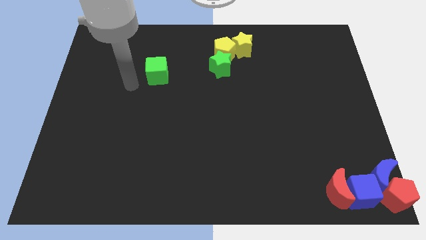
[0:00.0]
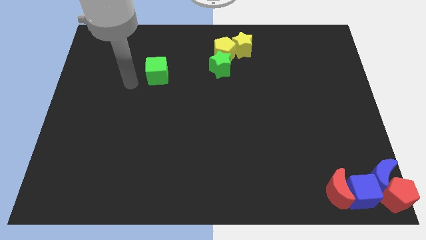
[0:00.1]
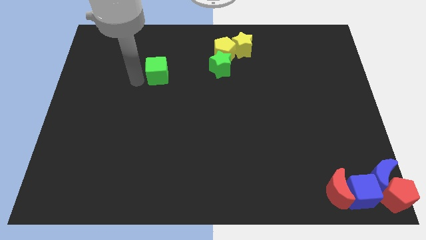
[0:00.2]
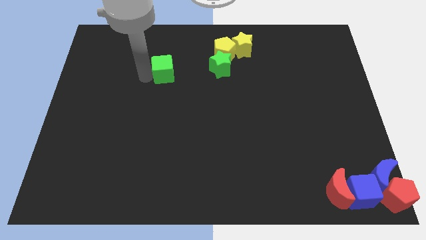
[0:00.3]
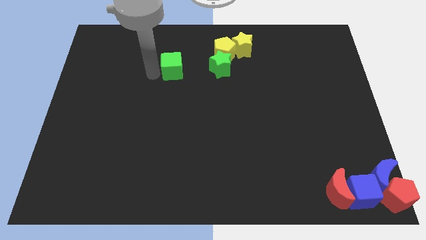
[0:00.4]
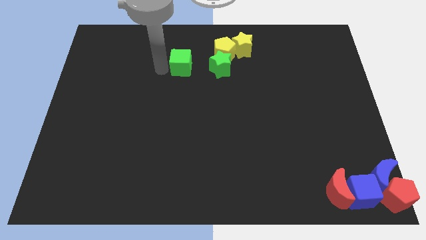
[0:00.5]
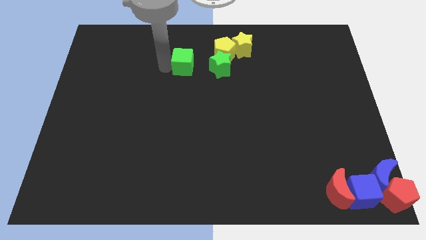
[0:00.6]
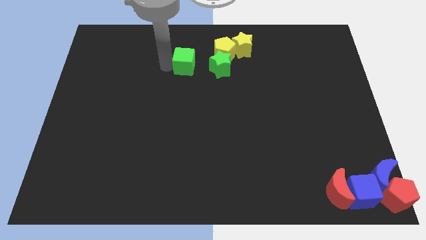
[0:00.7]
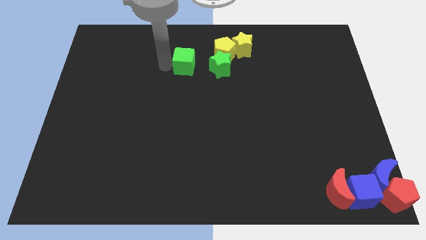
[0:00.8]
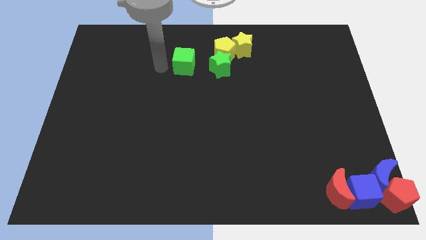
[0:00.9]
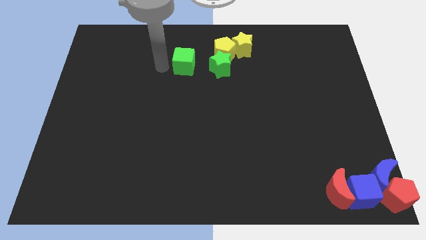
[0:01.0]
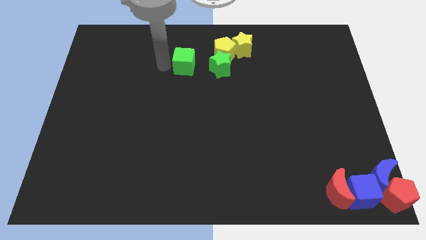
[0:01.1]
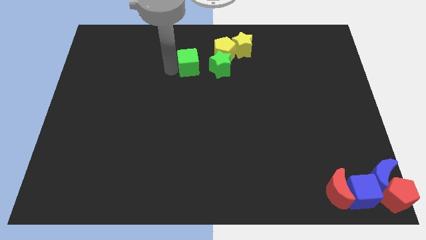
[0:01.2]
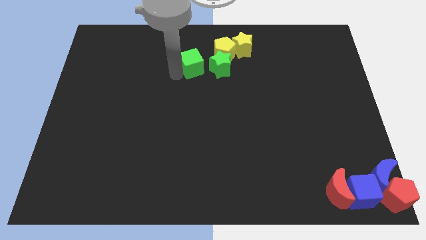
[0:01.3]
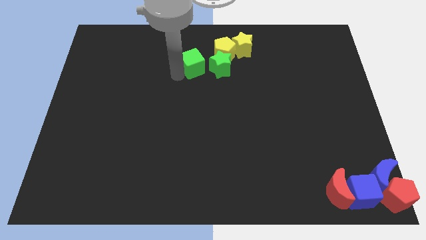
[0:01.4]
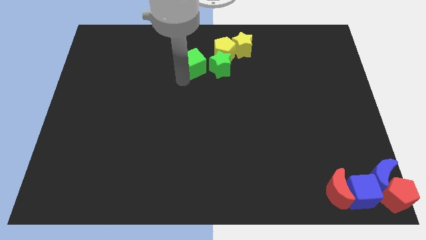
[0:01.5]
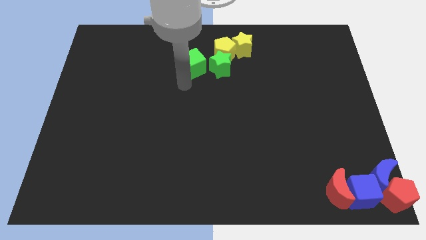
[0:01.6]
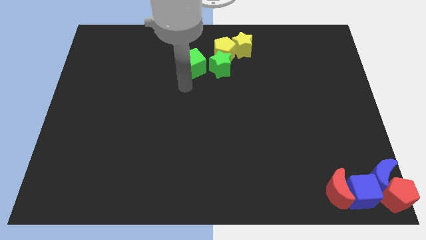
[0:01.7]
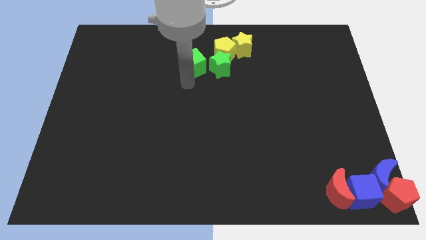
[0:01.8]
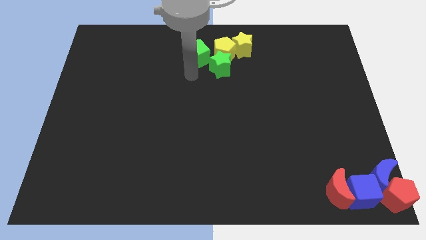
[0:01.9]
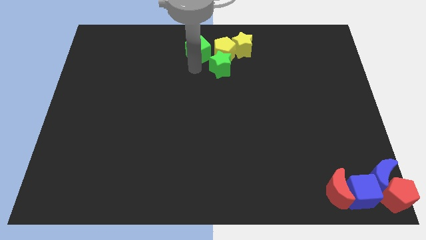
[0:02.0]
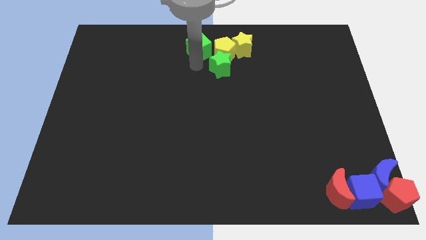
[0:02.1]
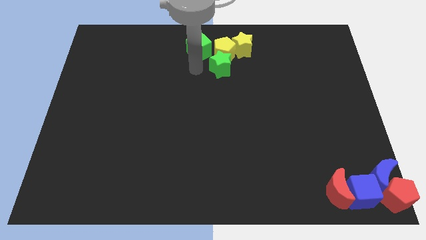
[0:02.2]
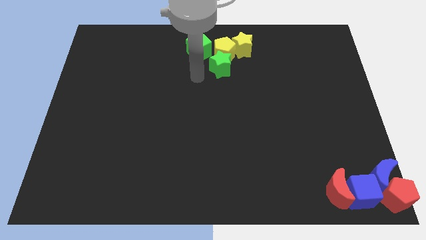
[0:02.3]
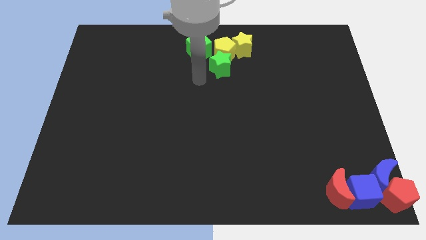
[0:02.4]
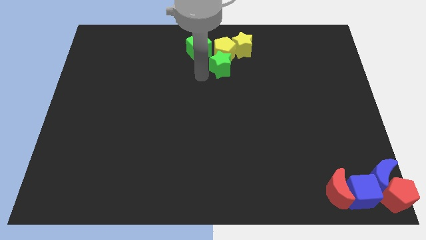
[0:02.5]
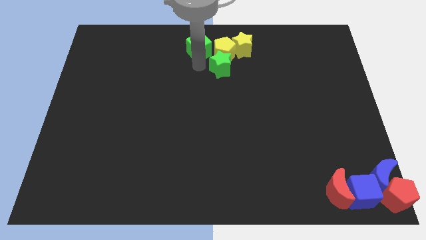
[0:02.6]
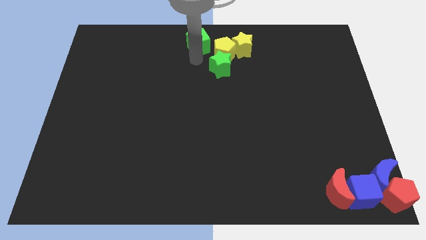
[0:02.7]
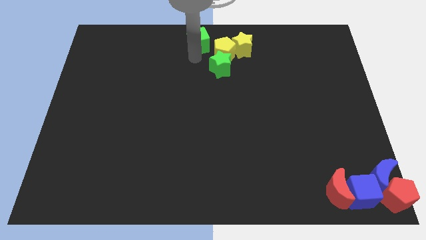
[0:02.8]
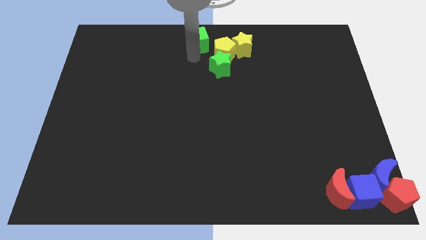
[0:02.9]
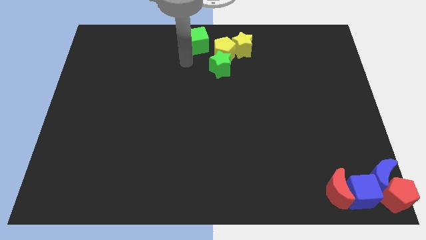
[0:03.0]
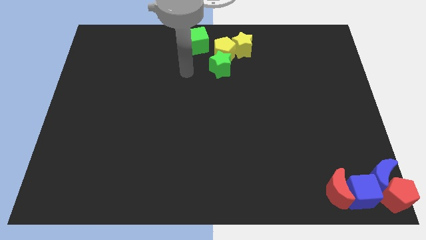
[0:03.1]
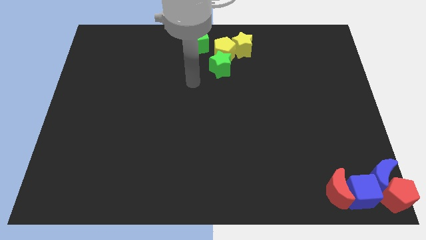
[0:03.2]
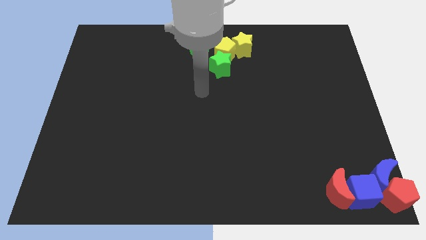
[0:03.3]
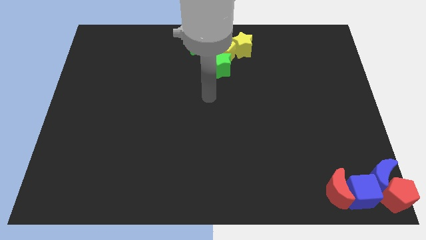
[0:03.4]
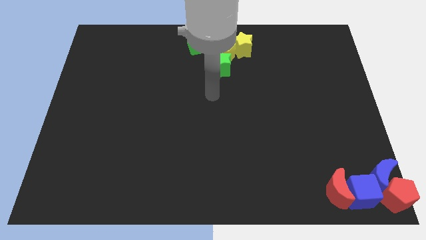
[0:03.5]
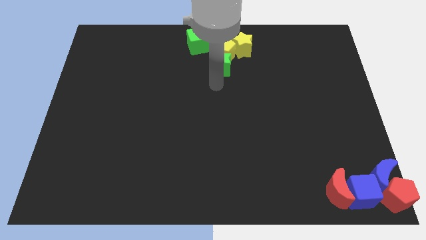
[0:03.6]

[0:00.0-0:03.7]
push a group of blocks to the top center of the board

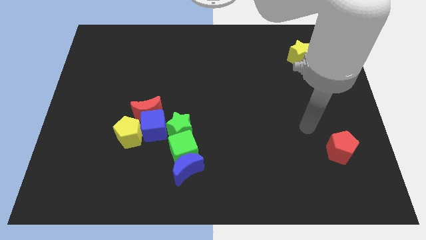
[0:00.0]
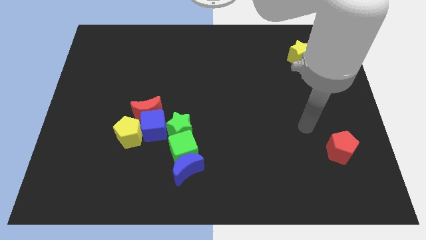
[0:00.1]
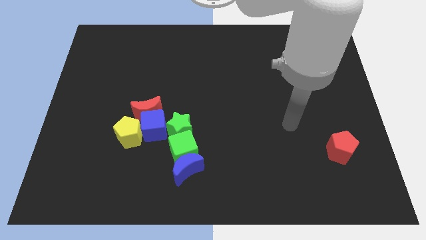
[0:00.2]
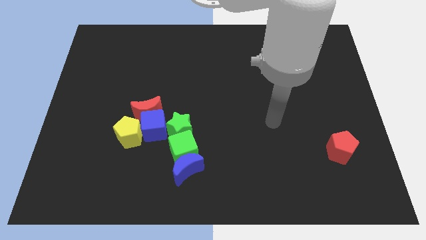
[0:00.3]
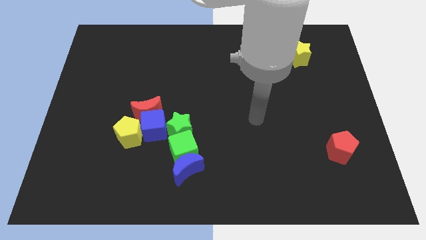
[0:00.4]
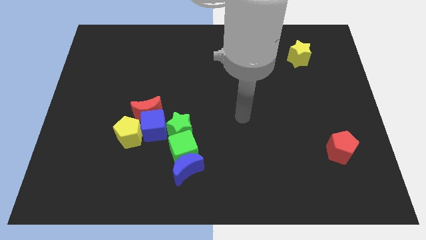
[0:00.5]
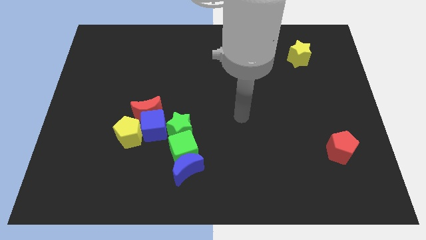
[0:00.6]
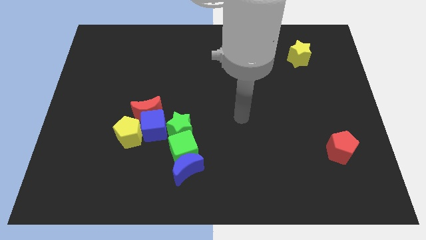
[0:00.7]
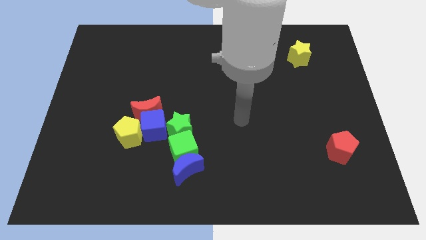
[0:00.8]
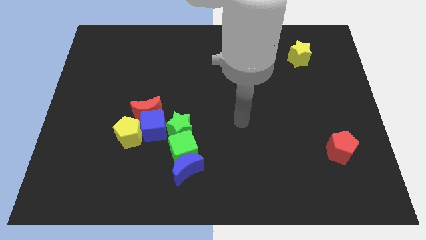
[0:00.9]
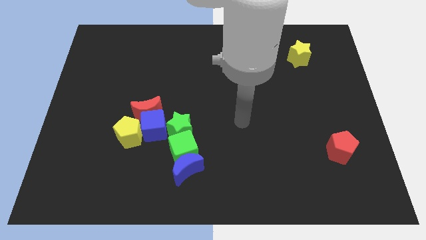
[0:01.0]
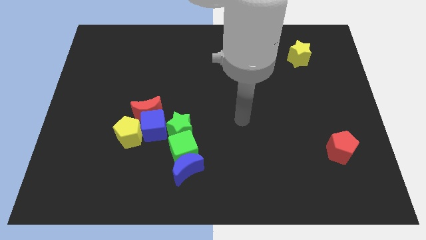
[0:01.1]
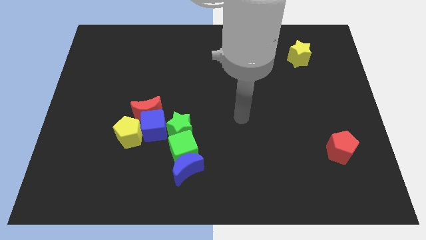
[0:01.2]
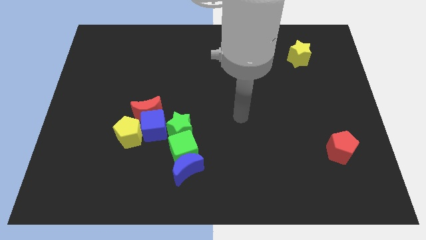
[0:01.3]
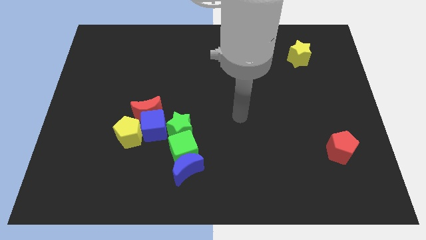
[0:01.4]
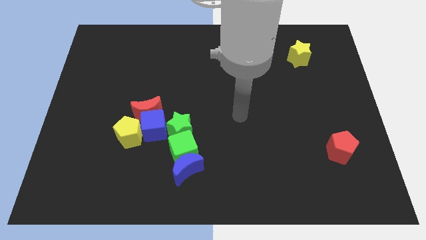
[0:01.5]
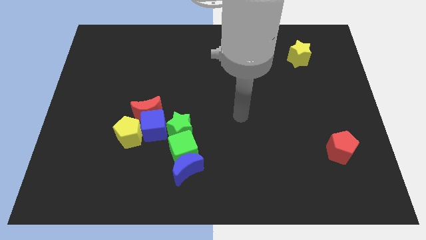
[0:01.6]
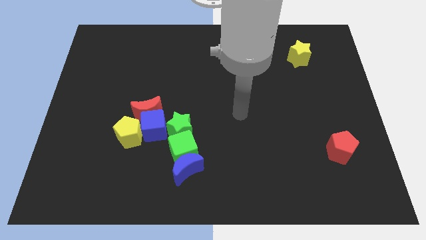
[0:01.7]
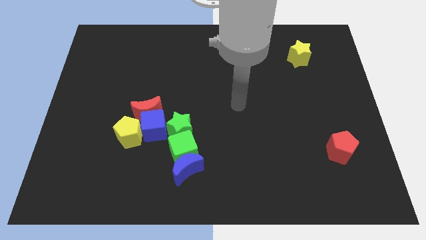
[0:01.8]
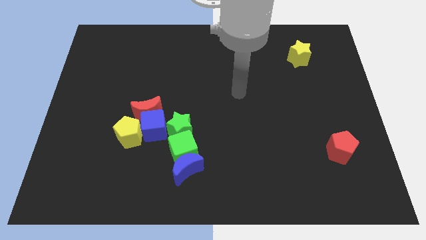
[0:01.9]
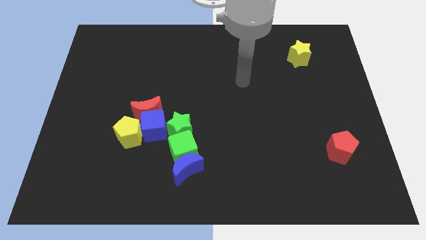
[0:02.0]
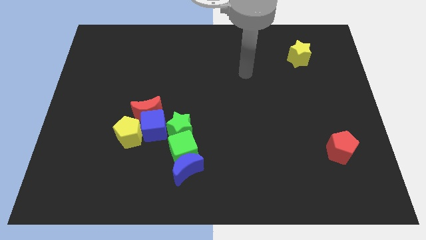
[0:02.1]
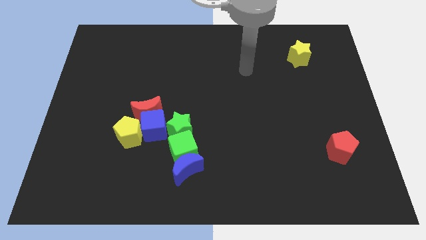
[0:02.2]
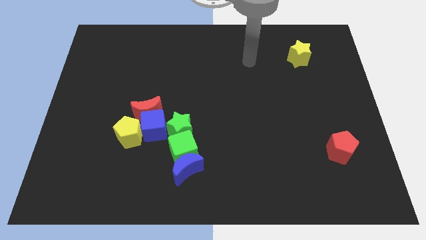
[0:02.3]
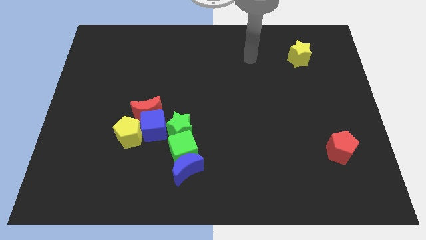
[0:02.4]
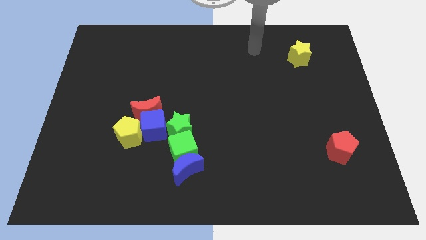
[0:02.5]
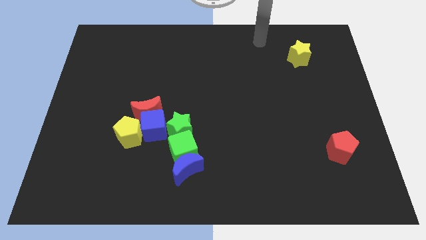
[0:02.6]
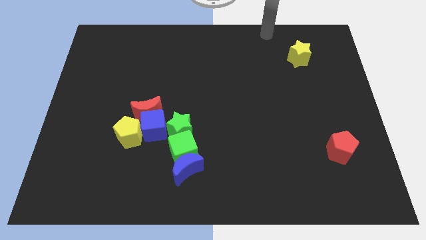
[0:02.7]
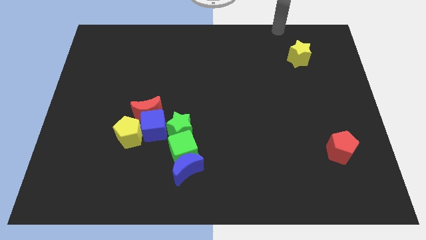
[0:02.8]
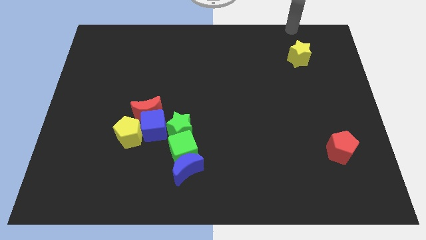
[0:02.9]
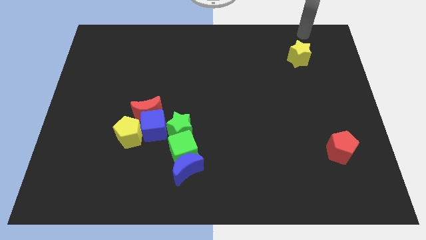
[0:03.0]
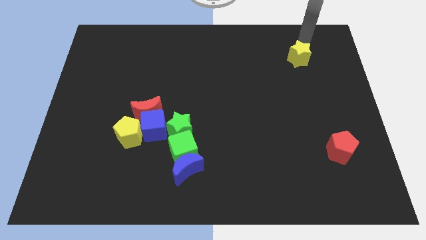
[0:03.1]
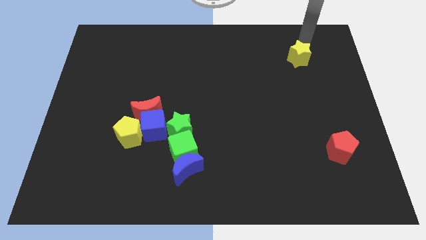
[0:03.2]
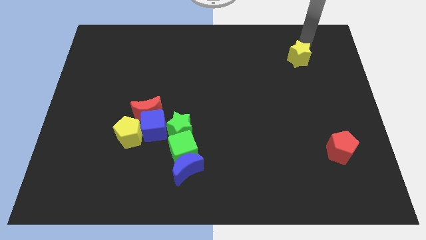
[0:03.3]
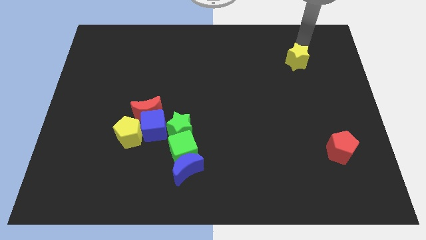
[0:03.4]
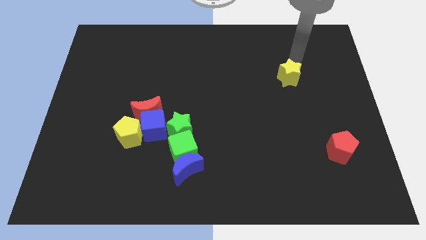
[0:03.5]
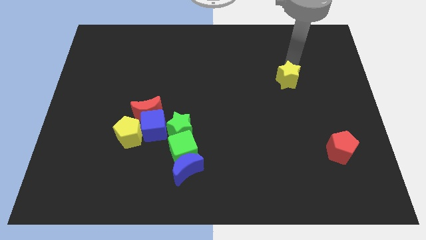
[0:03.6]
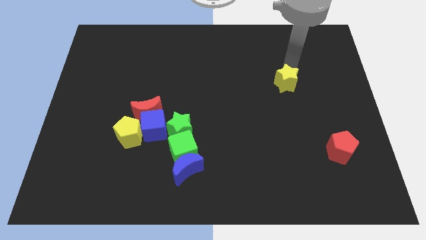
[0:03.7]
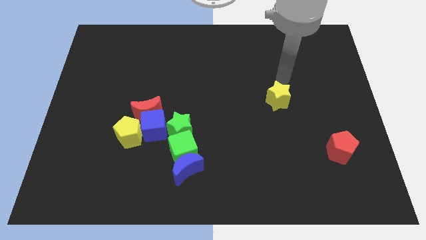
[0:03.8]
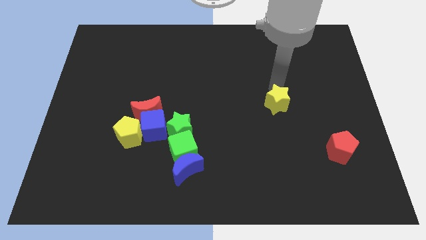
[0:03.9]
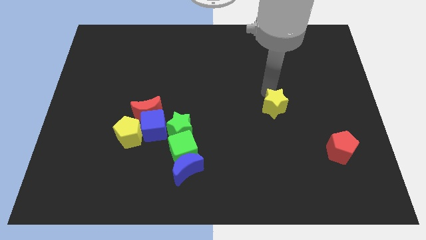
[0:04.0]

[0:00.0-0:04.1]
move the yellow star towards the center of the board

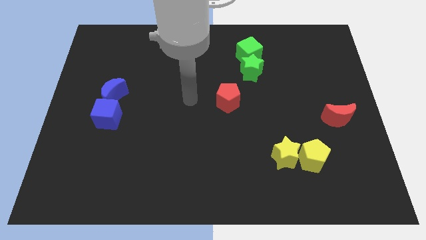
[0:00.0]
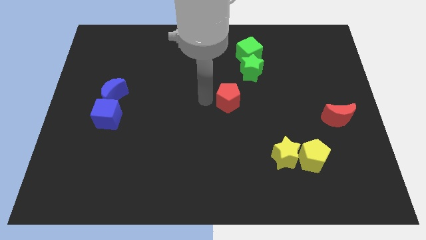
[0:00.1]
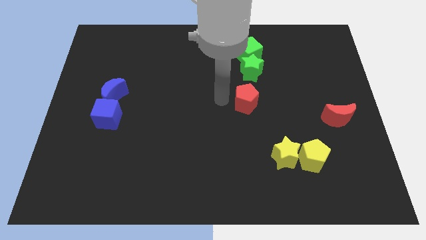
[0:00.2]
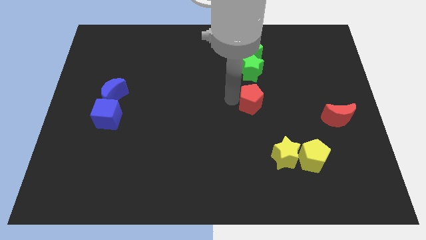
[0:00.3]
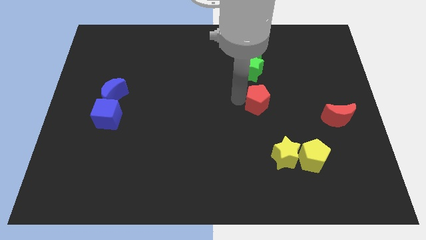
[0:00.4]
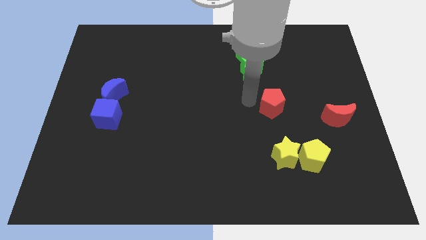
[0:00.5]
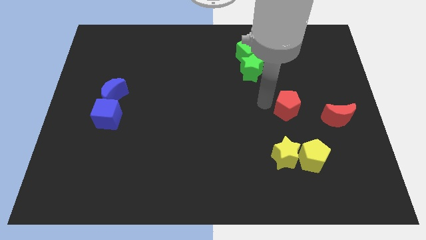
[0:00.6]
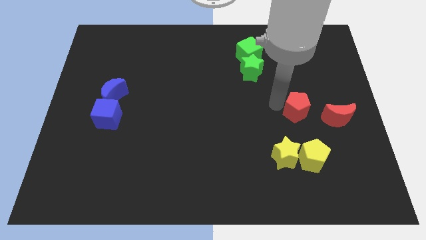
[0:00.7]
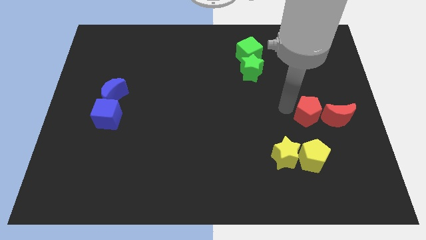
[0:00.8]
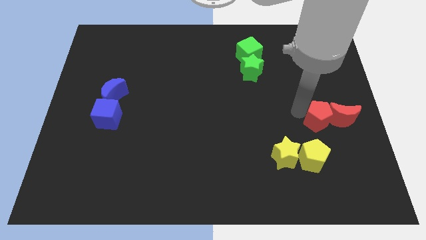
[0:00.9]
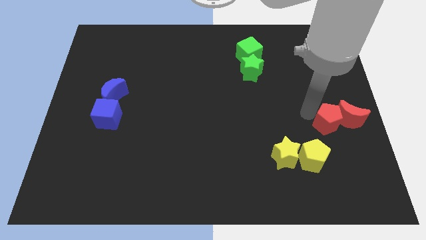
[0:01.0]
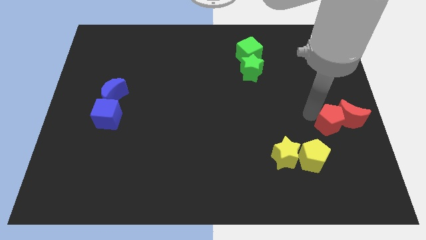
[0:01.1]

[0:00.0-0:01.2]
push the red pentagon into the red moon
